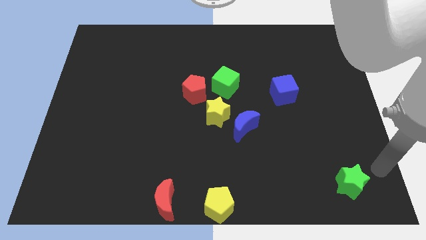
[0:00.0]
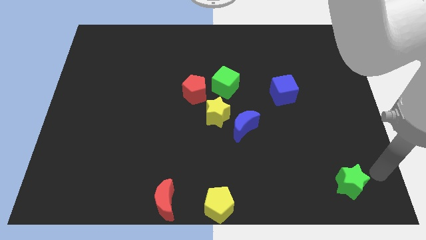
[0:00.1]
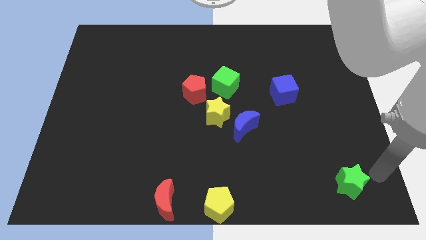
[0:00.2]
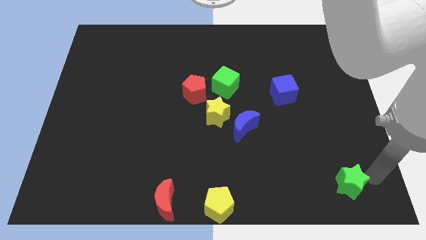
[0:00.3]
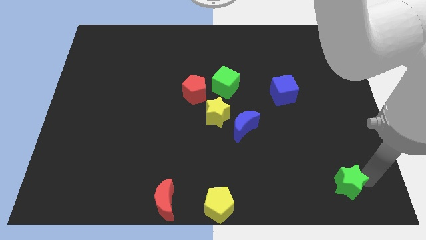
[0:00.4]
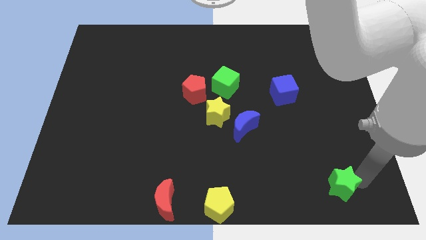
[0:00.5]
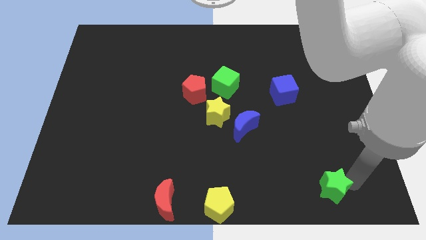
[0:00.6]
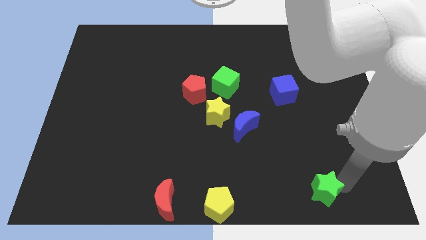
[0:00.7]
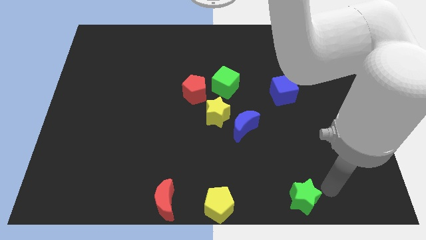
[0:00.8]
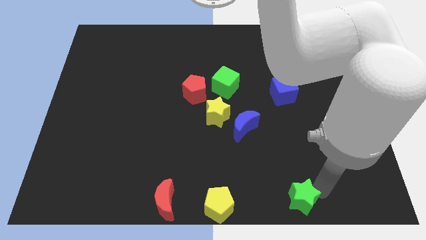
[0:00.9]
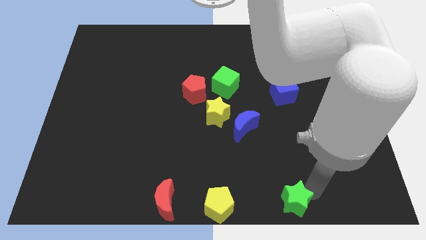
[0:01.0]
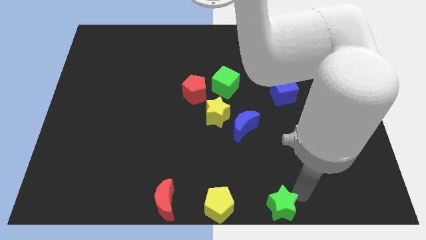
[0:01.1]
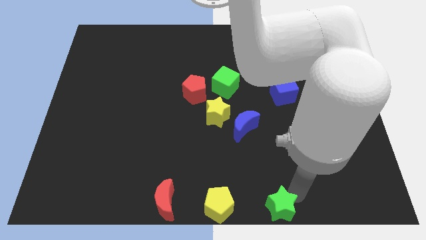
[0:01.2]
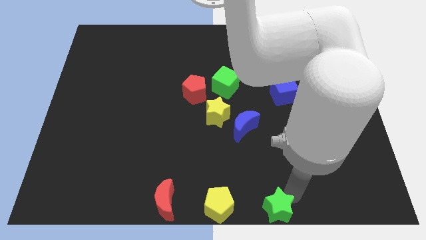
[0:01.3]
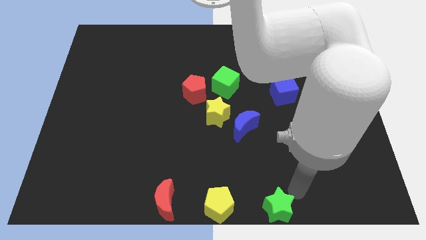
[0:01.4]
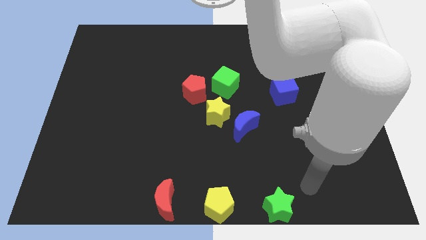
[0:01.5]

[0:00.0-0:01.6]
push the green star towards yellow pentagon

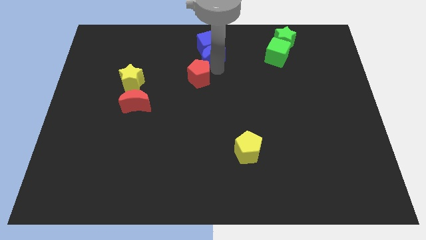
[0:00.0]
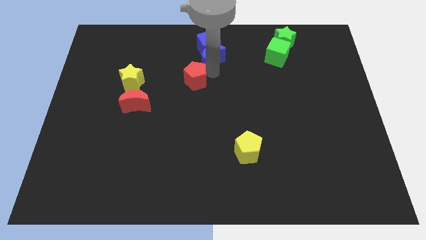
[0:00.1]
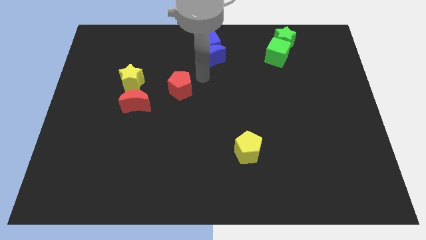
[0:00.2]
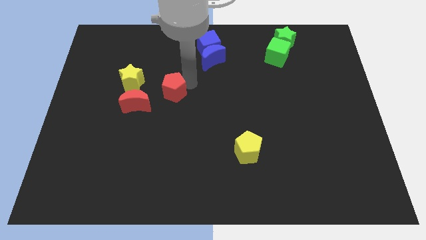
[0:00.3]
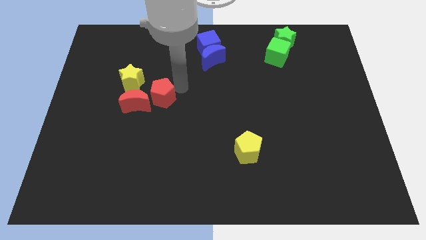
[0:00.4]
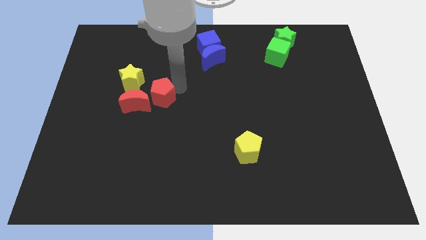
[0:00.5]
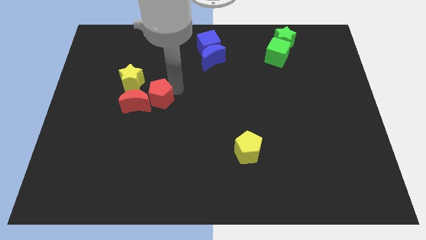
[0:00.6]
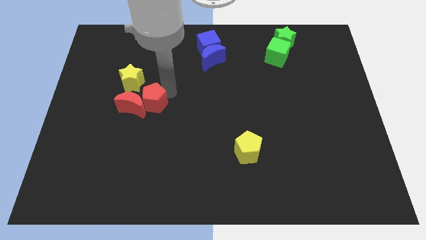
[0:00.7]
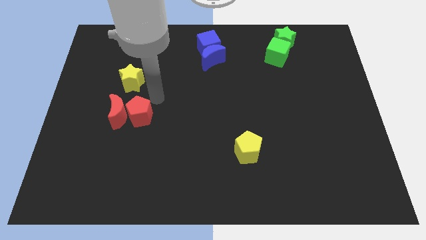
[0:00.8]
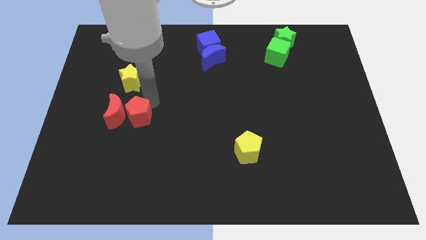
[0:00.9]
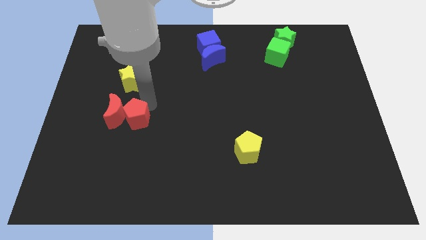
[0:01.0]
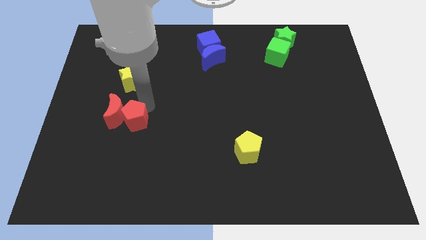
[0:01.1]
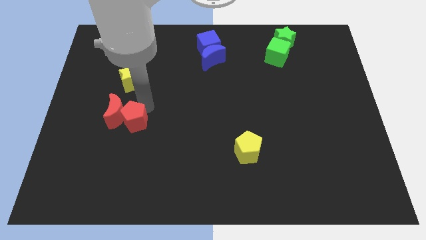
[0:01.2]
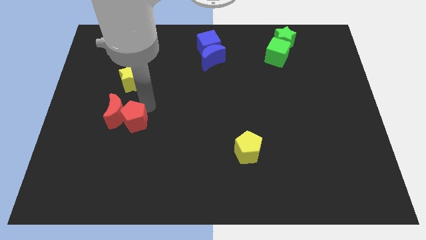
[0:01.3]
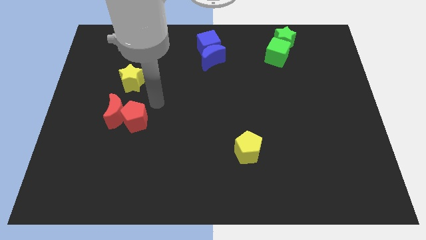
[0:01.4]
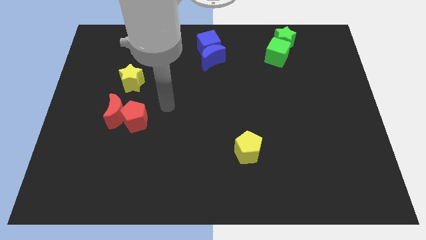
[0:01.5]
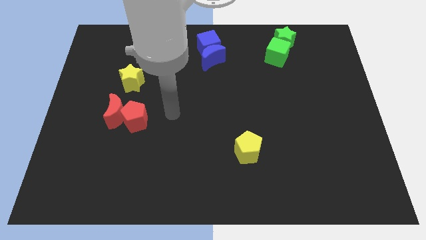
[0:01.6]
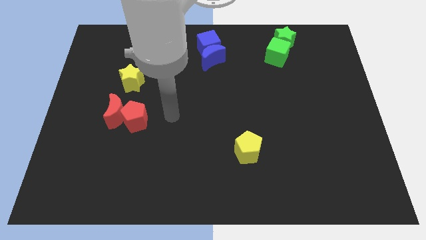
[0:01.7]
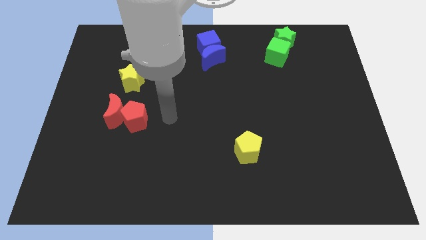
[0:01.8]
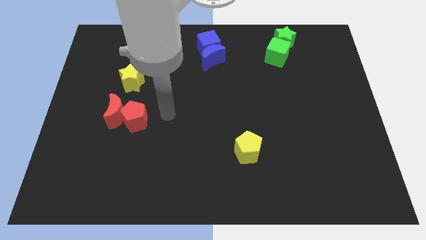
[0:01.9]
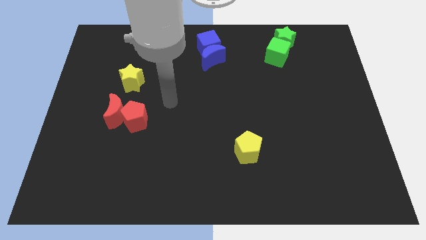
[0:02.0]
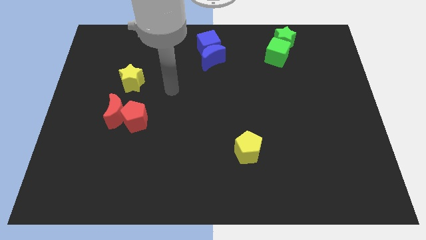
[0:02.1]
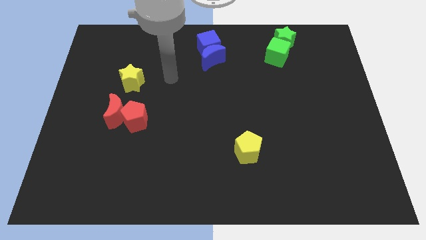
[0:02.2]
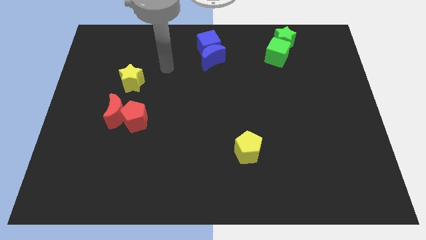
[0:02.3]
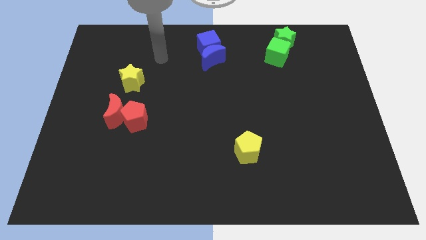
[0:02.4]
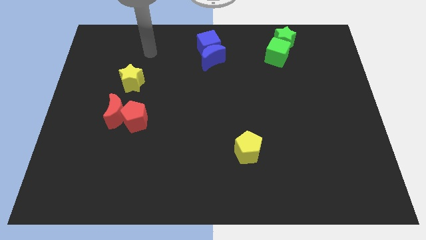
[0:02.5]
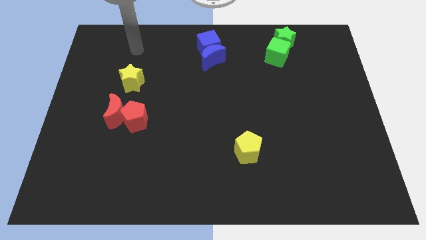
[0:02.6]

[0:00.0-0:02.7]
push the red pentagon into the red crescent

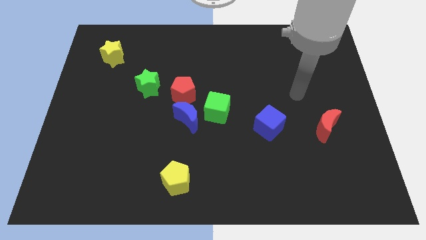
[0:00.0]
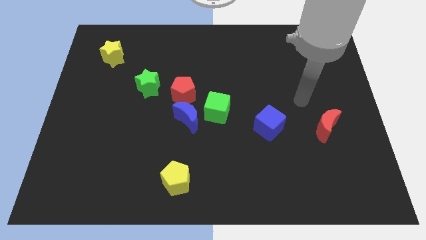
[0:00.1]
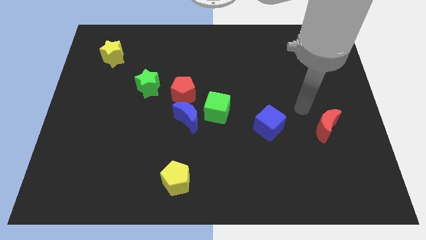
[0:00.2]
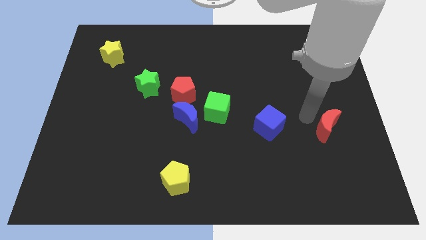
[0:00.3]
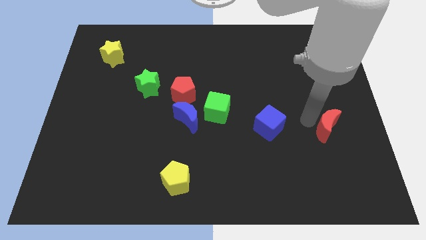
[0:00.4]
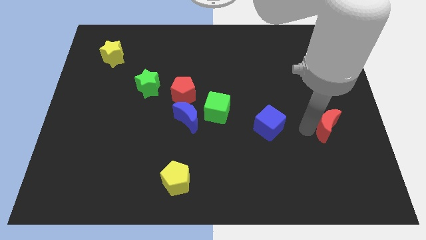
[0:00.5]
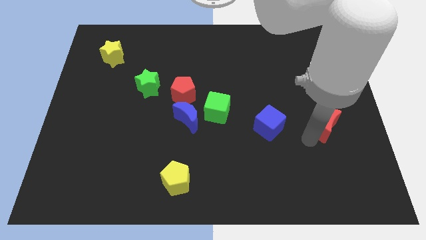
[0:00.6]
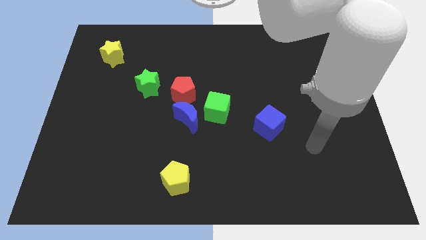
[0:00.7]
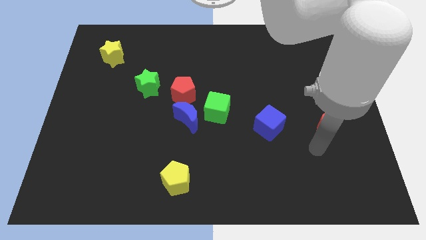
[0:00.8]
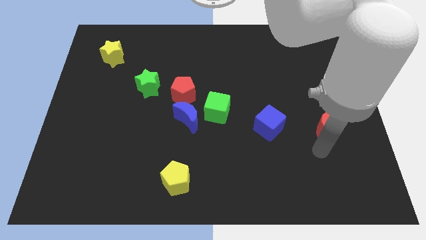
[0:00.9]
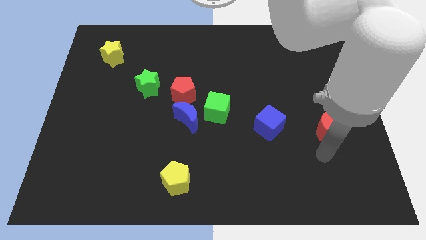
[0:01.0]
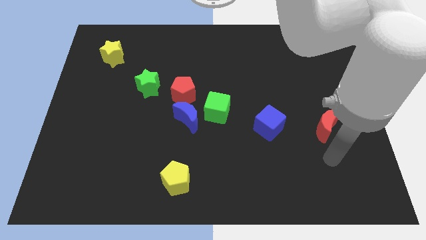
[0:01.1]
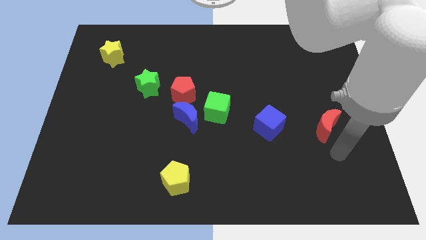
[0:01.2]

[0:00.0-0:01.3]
point the arm below the red moon

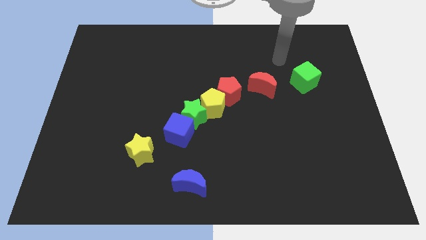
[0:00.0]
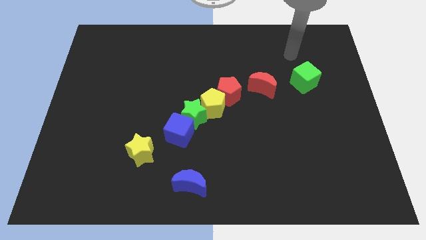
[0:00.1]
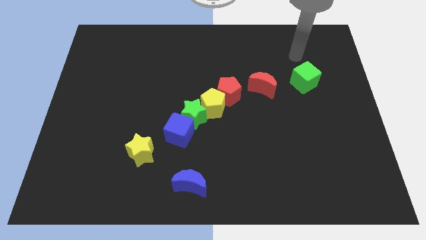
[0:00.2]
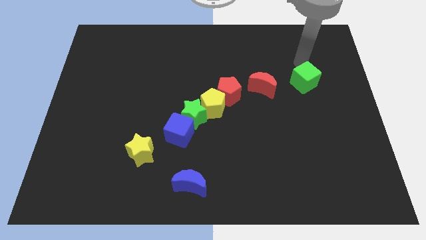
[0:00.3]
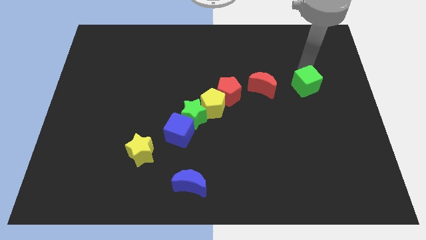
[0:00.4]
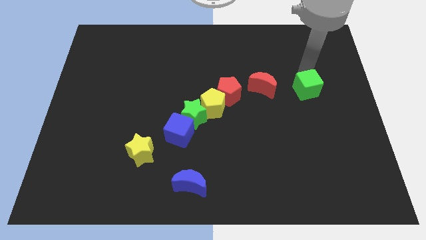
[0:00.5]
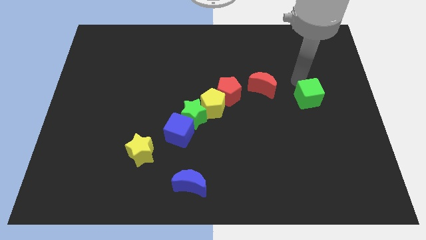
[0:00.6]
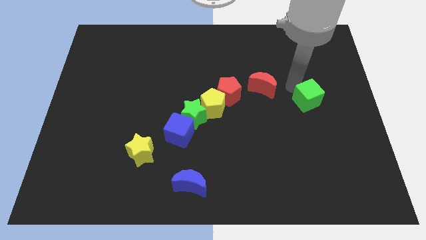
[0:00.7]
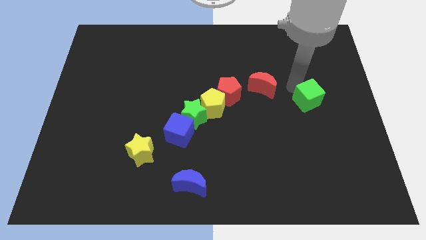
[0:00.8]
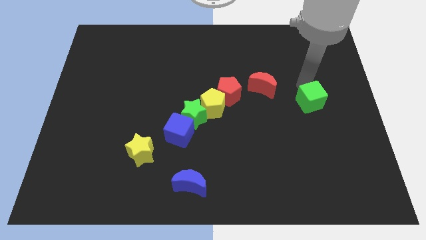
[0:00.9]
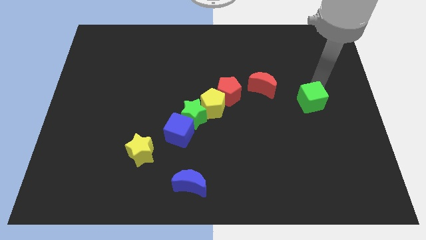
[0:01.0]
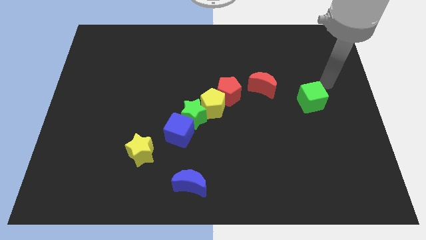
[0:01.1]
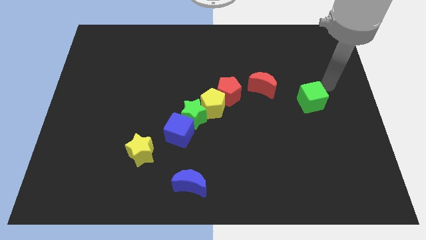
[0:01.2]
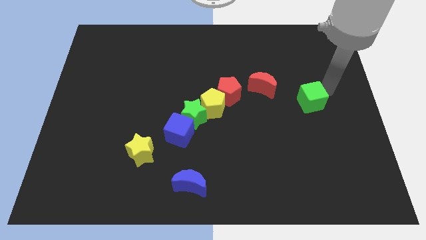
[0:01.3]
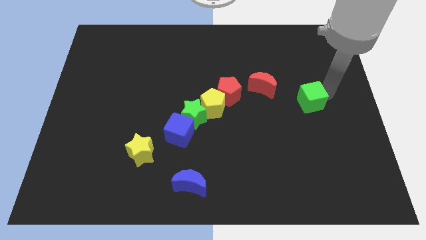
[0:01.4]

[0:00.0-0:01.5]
move the green cube slightly downwards

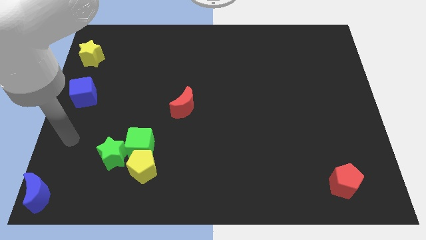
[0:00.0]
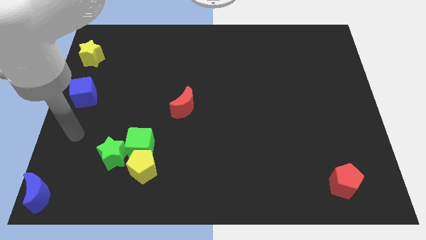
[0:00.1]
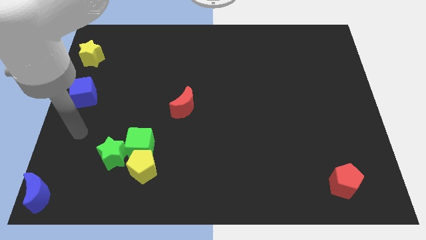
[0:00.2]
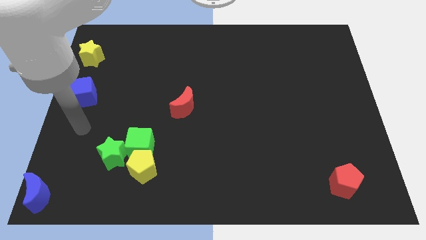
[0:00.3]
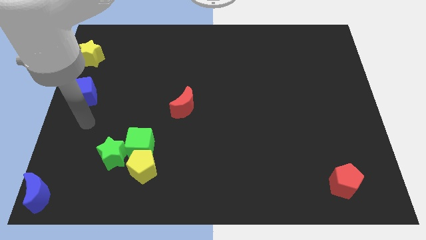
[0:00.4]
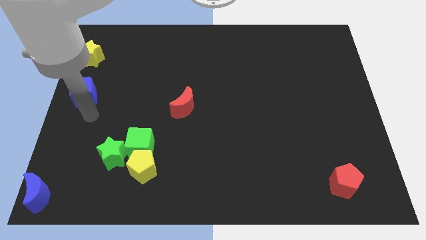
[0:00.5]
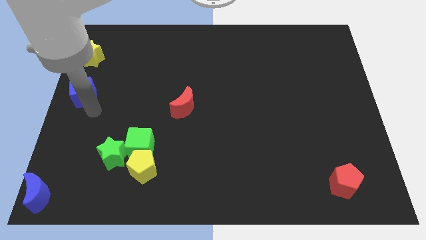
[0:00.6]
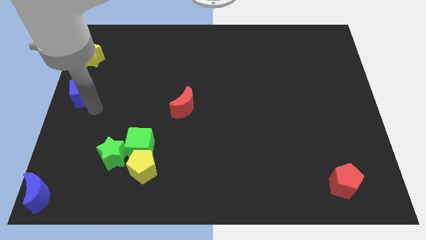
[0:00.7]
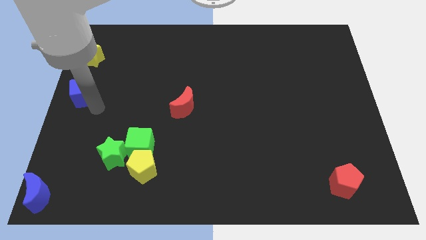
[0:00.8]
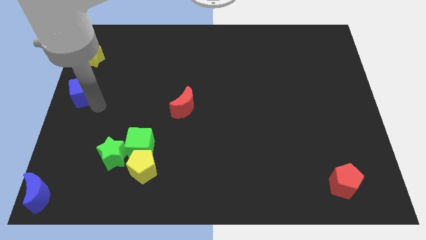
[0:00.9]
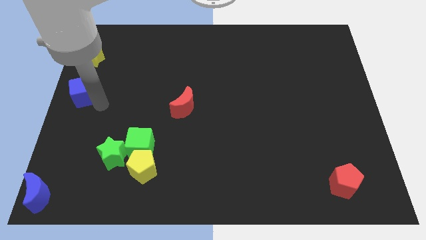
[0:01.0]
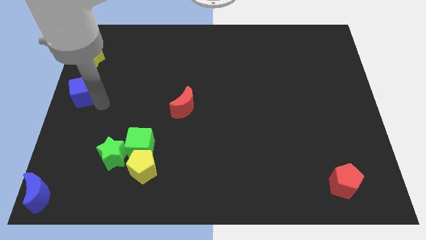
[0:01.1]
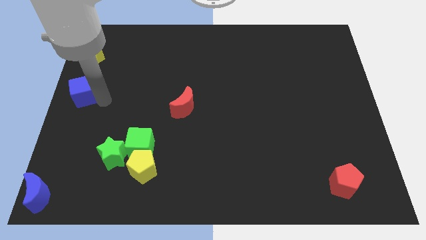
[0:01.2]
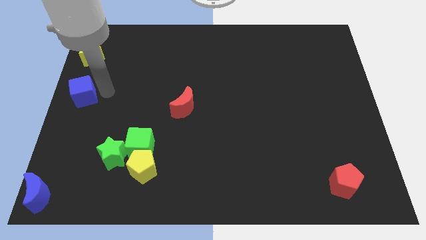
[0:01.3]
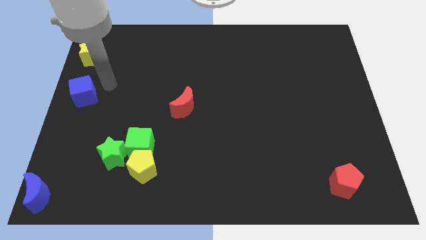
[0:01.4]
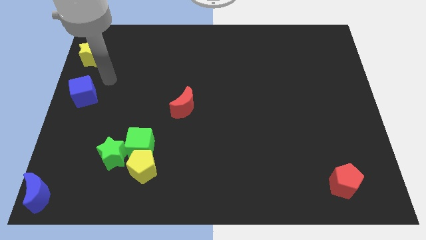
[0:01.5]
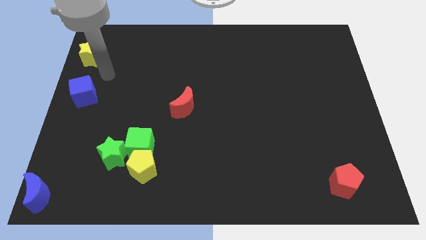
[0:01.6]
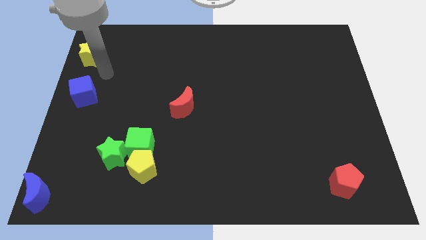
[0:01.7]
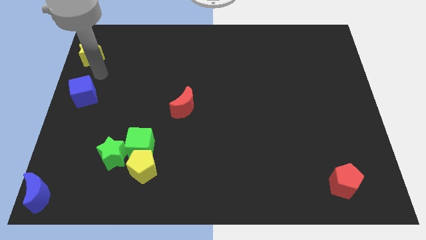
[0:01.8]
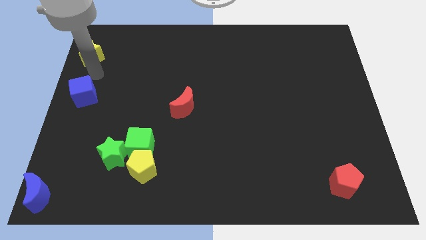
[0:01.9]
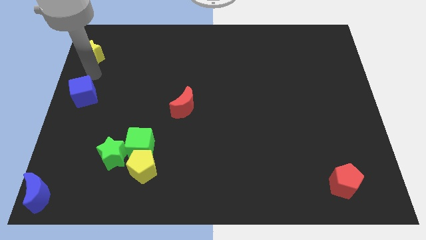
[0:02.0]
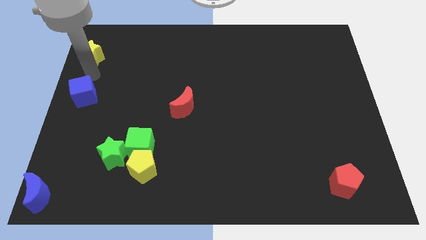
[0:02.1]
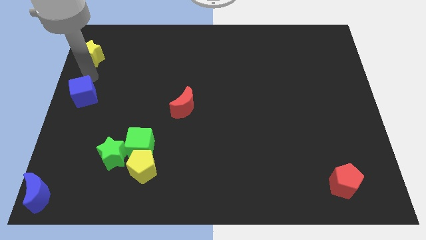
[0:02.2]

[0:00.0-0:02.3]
point your arm at the top of the blue cube
